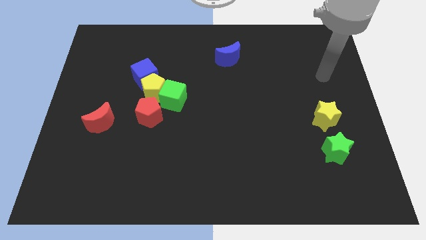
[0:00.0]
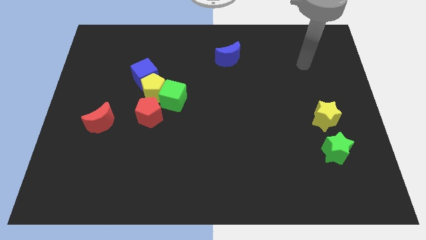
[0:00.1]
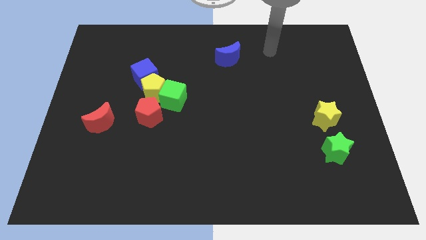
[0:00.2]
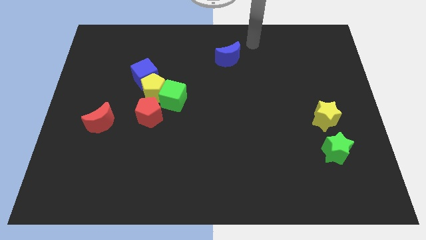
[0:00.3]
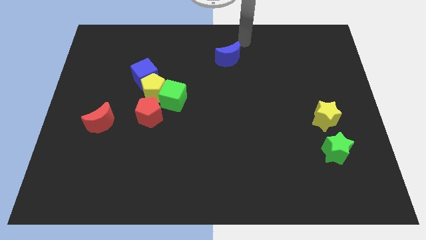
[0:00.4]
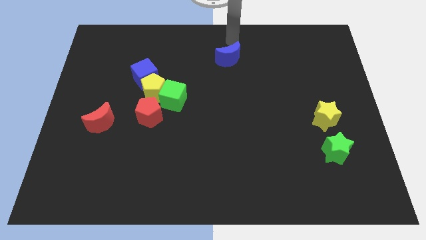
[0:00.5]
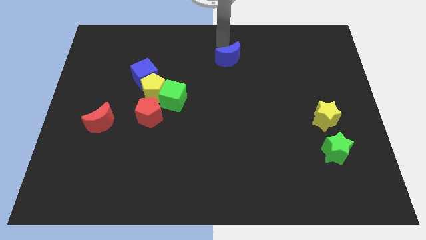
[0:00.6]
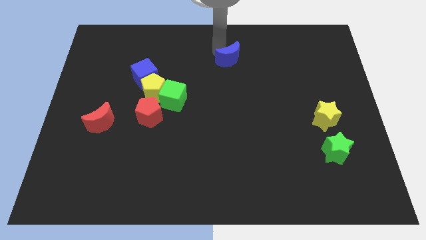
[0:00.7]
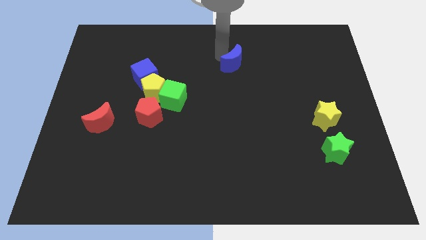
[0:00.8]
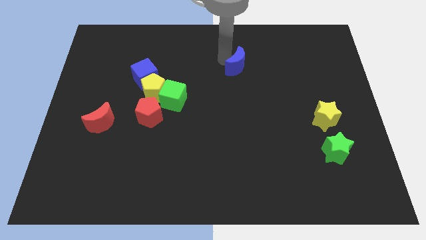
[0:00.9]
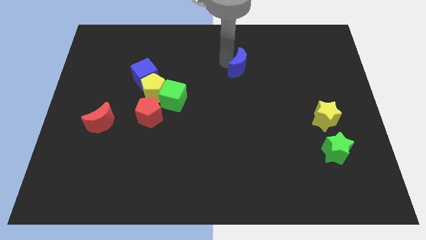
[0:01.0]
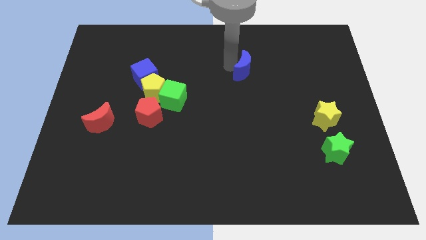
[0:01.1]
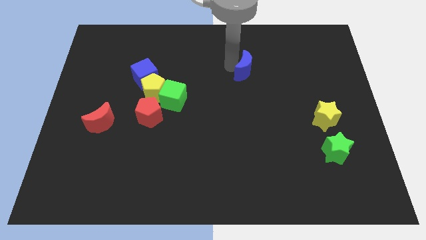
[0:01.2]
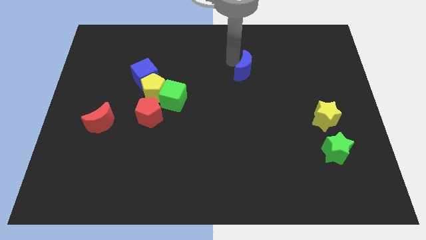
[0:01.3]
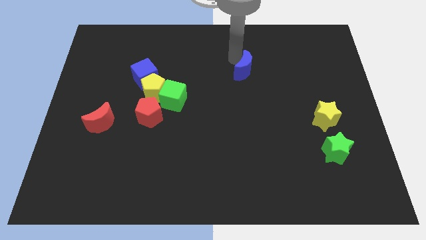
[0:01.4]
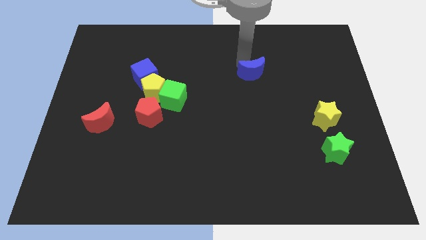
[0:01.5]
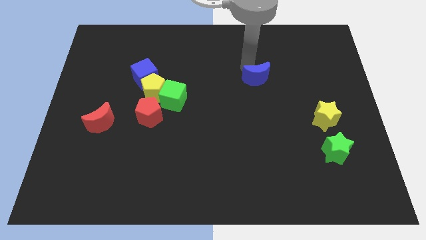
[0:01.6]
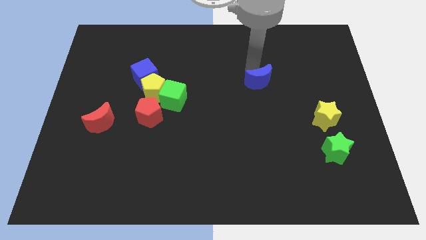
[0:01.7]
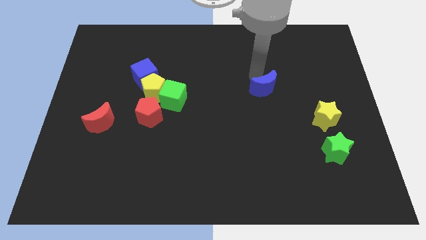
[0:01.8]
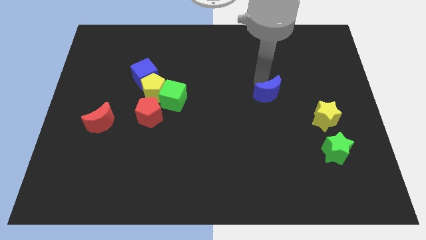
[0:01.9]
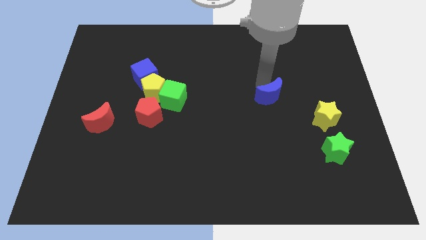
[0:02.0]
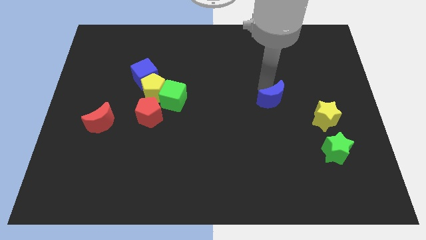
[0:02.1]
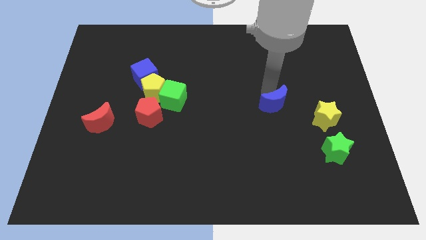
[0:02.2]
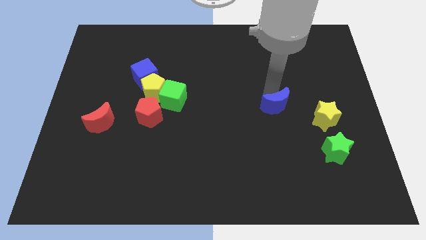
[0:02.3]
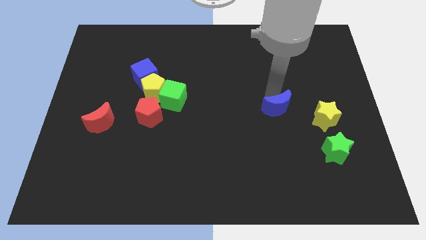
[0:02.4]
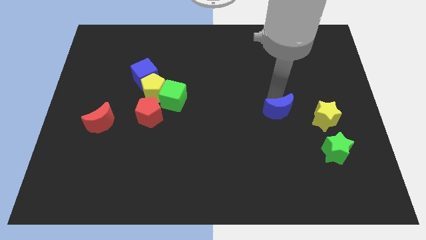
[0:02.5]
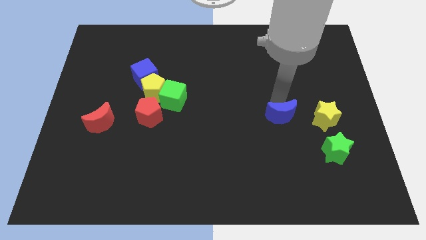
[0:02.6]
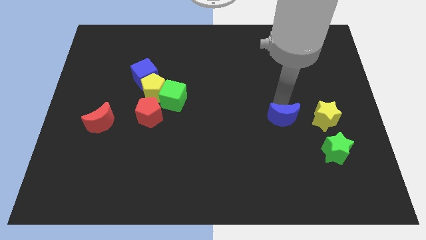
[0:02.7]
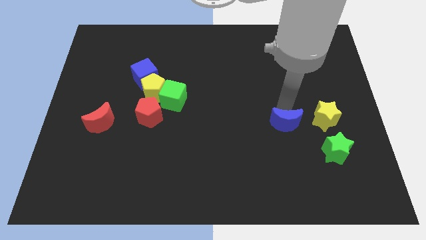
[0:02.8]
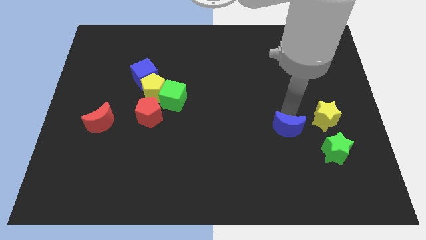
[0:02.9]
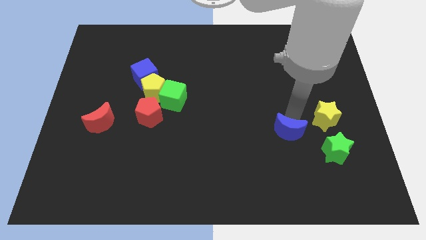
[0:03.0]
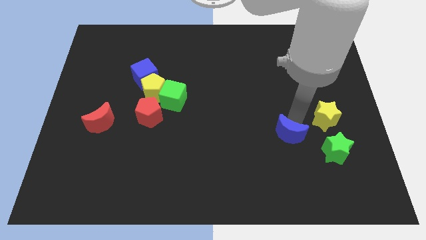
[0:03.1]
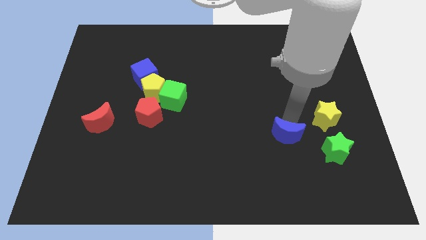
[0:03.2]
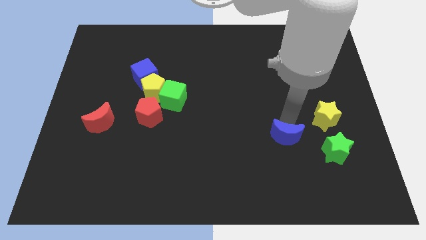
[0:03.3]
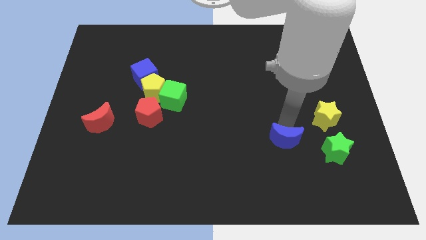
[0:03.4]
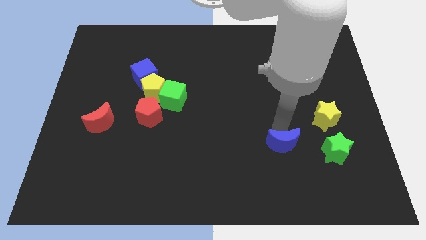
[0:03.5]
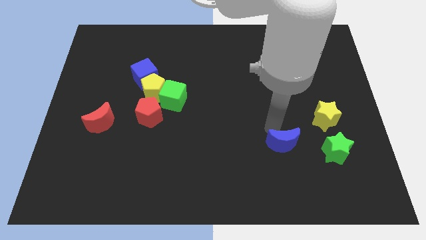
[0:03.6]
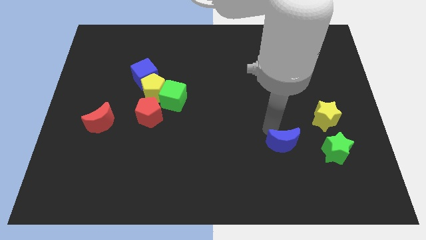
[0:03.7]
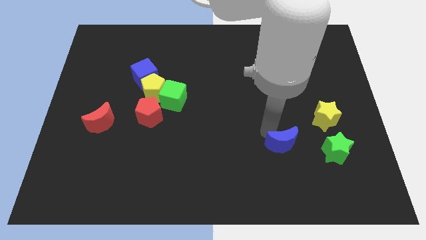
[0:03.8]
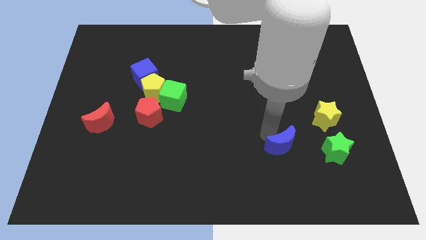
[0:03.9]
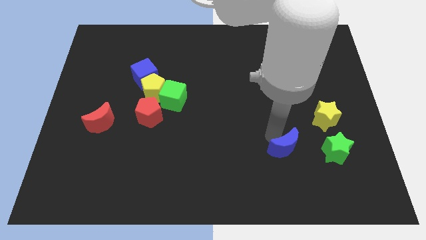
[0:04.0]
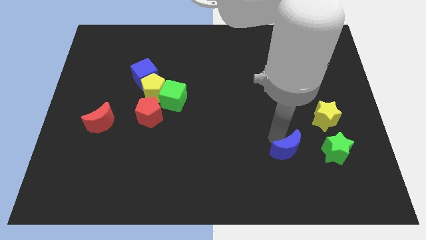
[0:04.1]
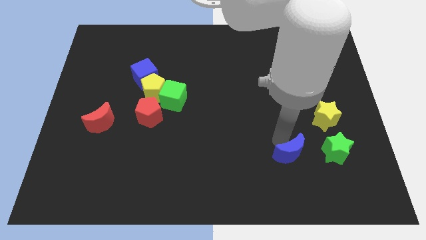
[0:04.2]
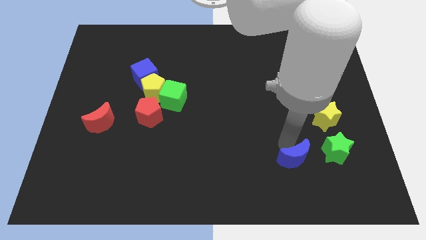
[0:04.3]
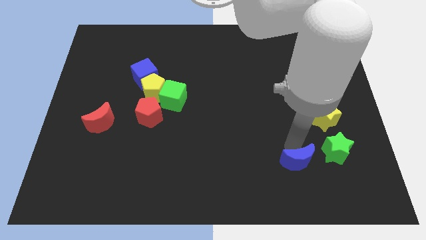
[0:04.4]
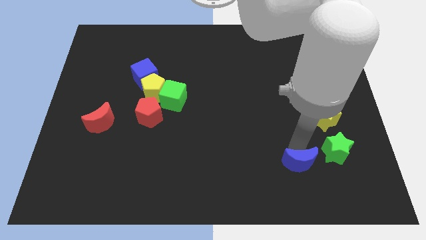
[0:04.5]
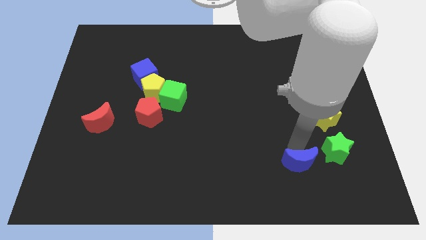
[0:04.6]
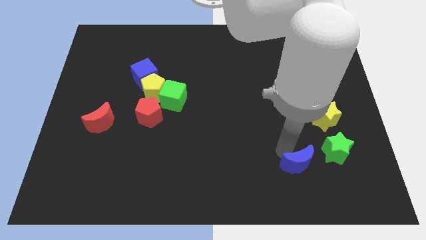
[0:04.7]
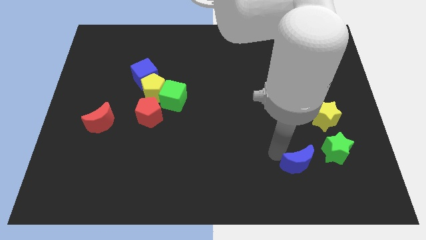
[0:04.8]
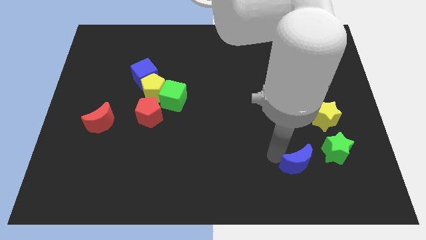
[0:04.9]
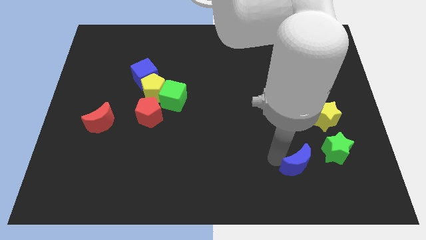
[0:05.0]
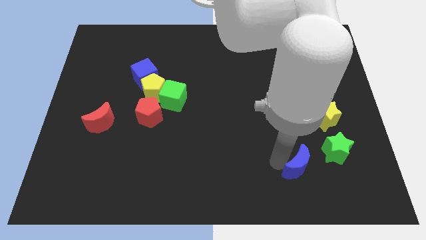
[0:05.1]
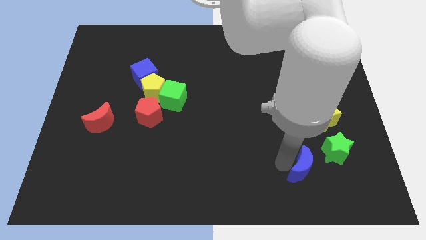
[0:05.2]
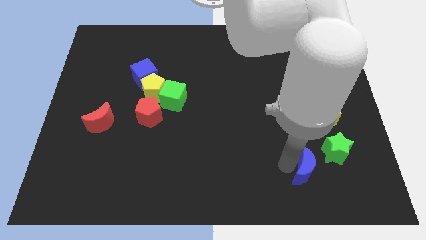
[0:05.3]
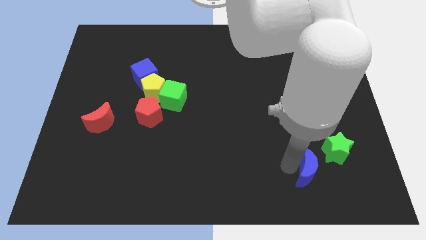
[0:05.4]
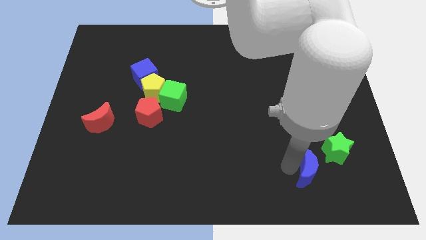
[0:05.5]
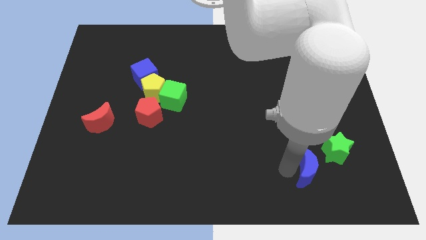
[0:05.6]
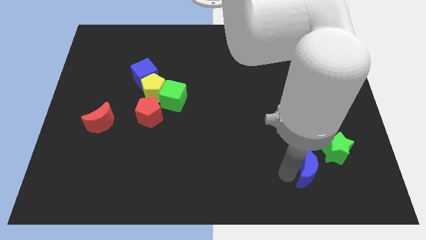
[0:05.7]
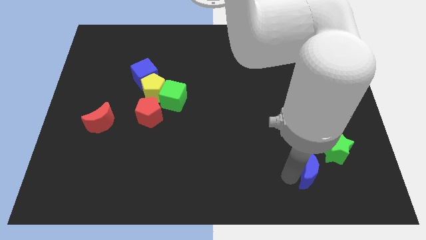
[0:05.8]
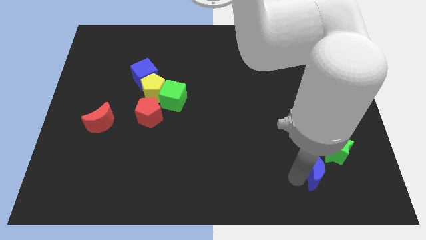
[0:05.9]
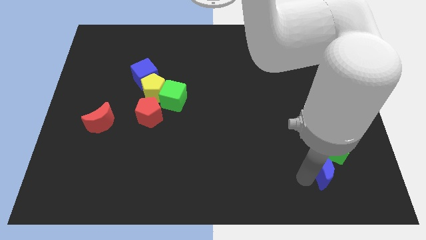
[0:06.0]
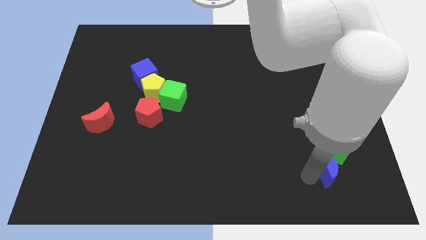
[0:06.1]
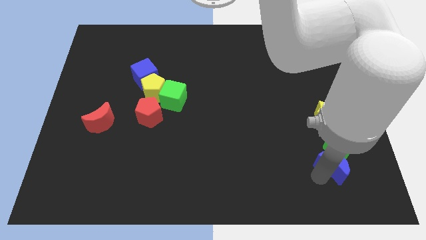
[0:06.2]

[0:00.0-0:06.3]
push the blue moon next to the green star

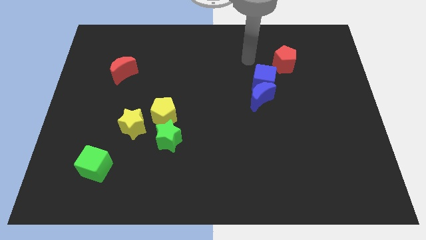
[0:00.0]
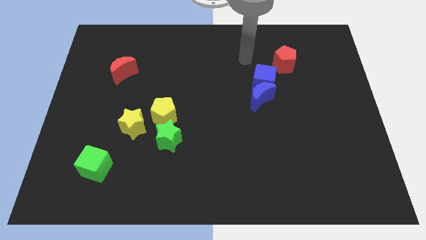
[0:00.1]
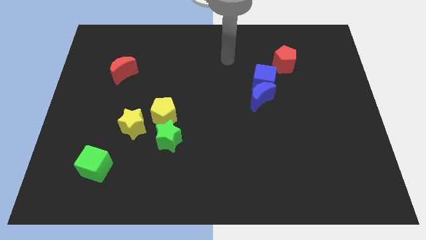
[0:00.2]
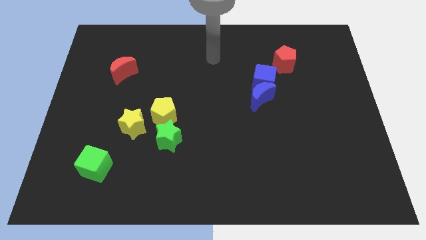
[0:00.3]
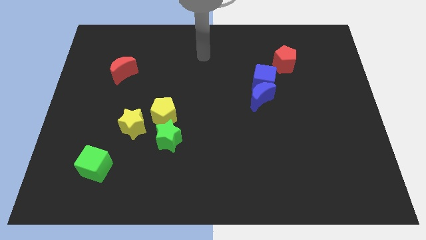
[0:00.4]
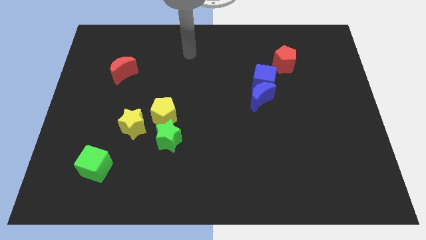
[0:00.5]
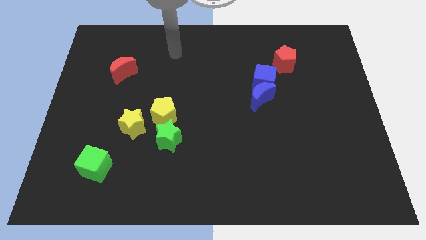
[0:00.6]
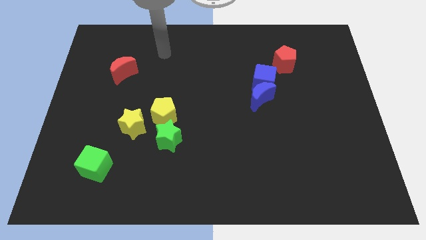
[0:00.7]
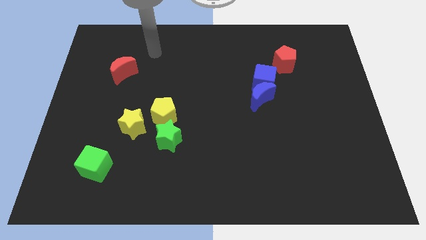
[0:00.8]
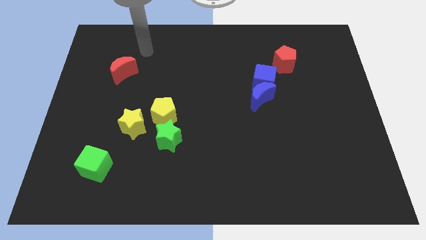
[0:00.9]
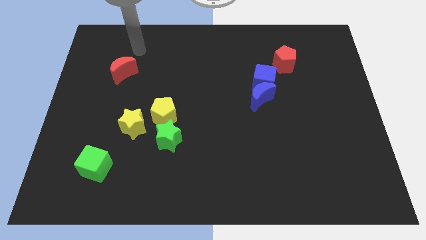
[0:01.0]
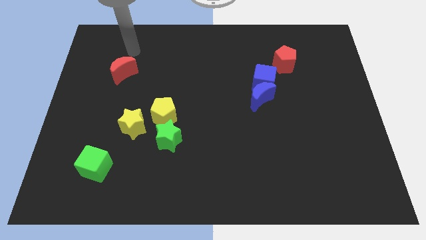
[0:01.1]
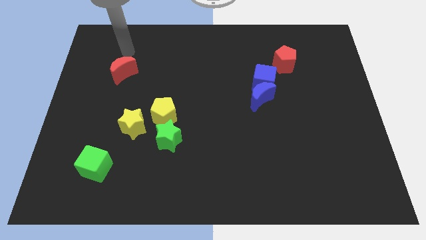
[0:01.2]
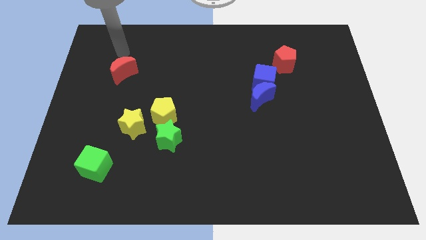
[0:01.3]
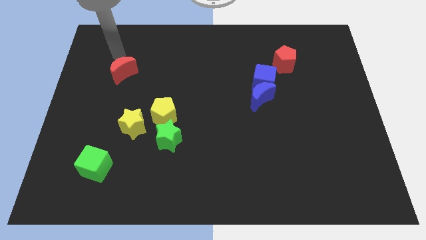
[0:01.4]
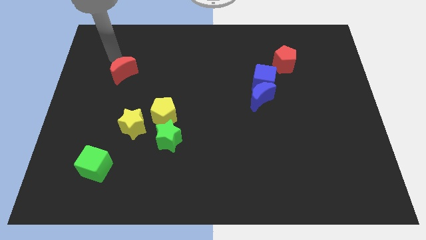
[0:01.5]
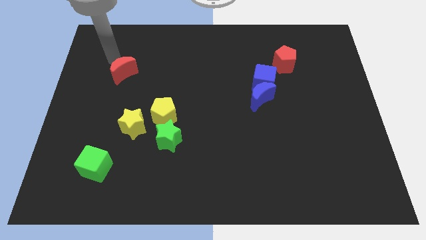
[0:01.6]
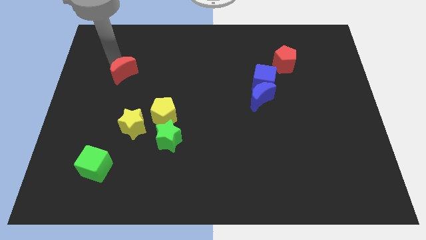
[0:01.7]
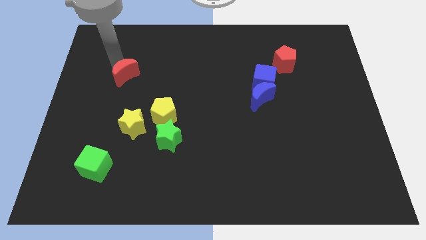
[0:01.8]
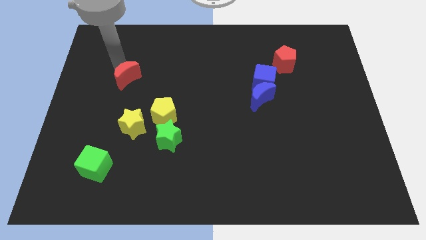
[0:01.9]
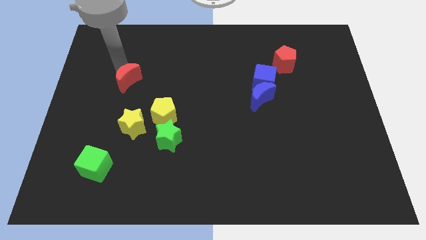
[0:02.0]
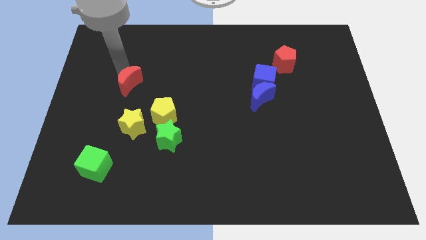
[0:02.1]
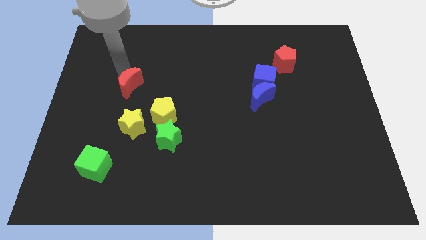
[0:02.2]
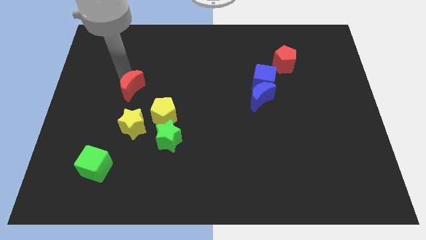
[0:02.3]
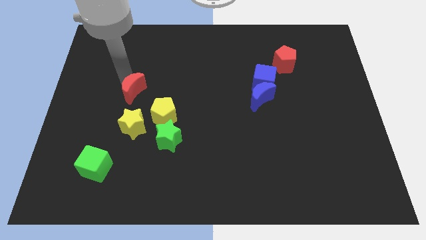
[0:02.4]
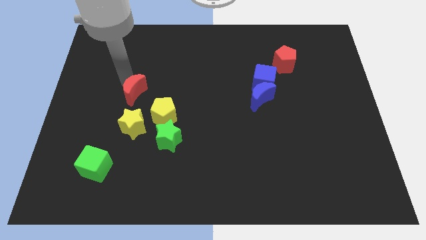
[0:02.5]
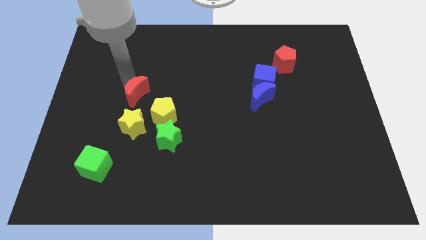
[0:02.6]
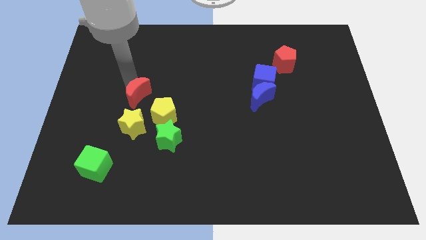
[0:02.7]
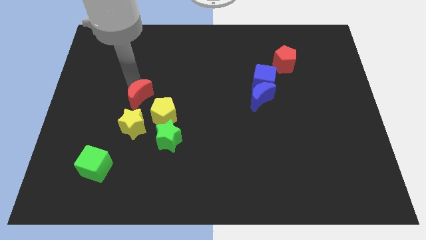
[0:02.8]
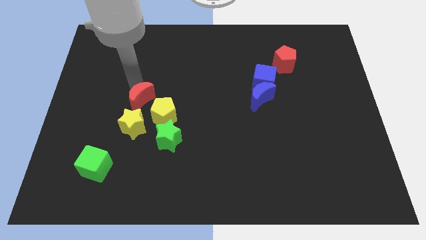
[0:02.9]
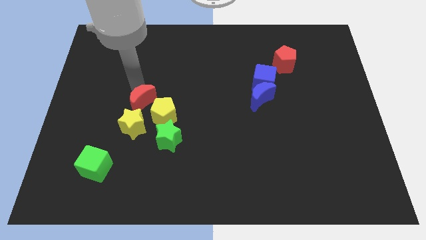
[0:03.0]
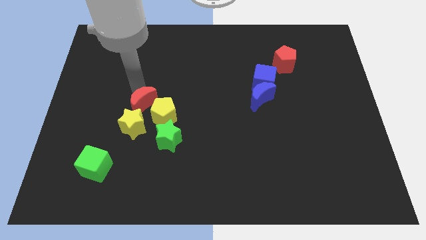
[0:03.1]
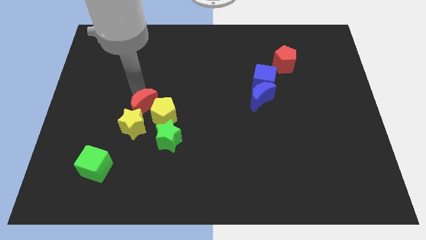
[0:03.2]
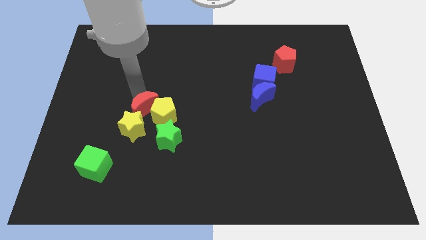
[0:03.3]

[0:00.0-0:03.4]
move the red moon towards the yellow pentagon
